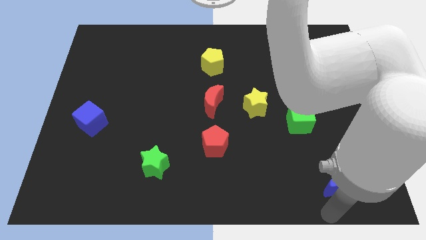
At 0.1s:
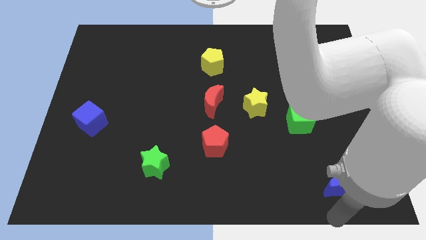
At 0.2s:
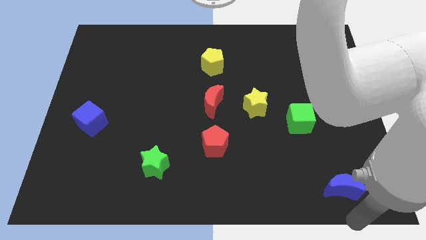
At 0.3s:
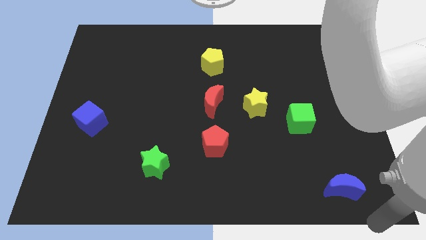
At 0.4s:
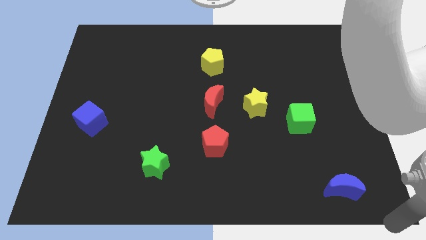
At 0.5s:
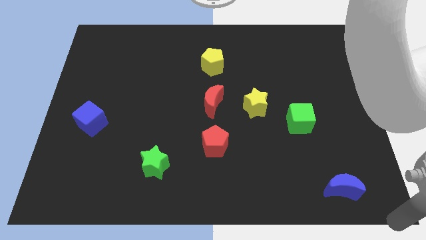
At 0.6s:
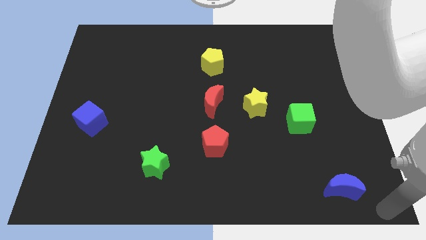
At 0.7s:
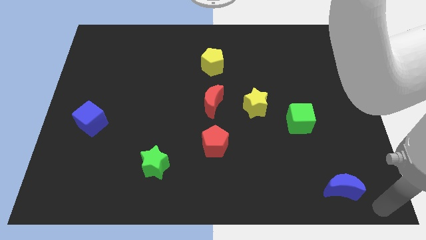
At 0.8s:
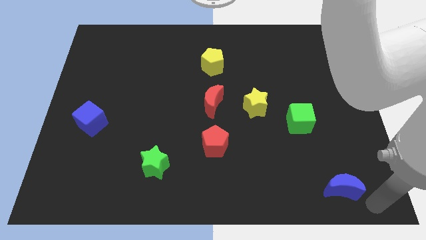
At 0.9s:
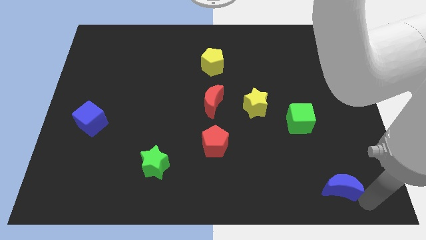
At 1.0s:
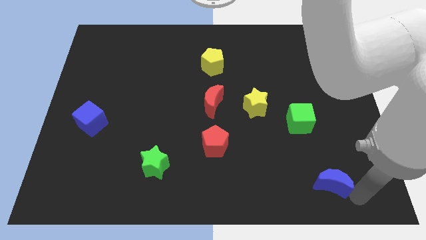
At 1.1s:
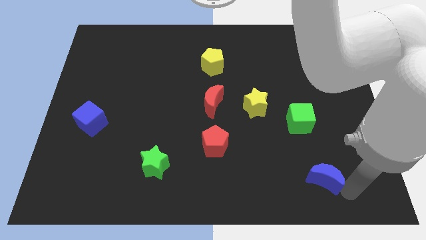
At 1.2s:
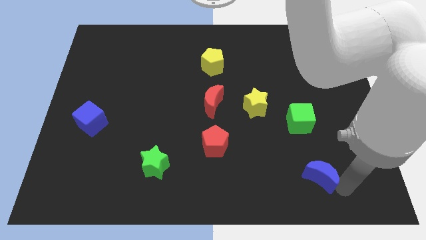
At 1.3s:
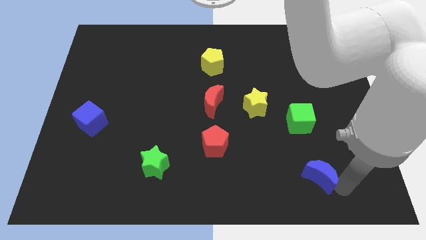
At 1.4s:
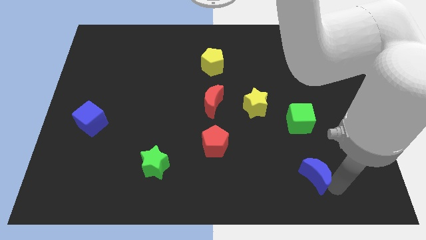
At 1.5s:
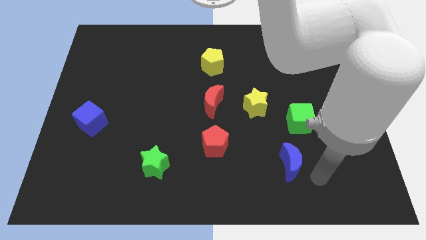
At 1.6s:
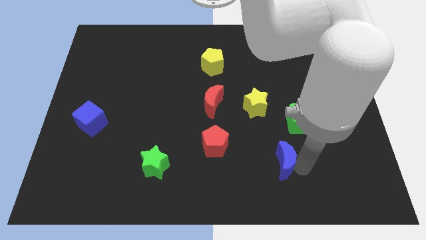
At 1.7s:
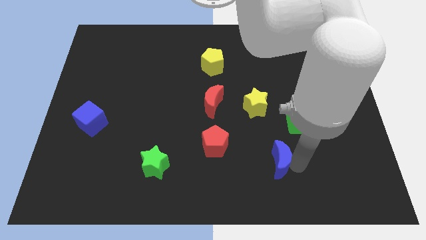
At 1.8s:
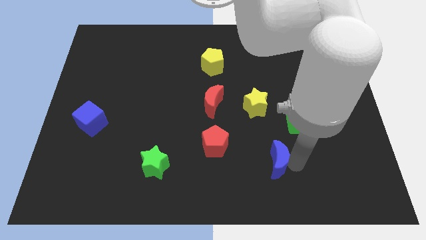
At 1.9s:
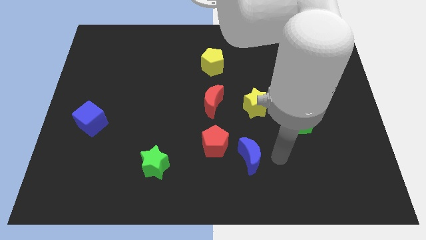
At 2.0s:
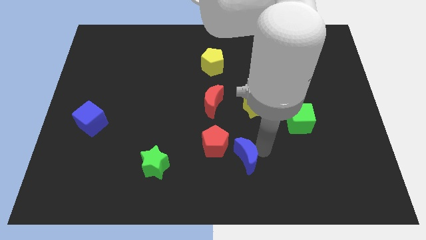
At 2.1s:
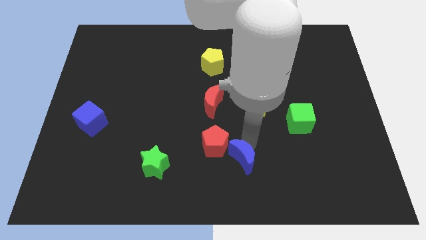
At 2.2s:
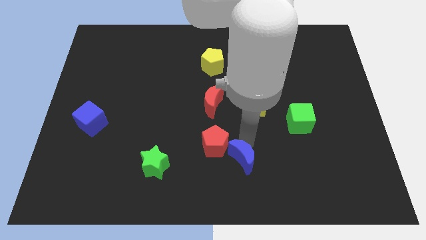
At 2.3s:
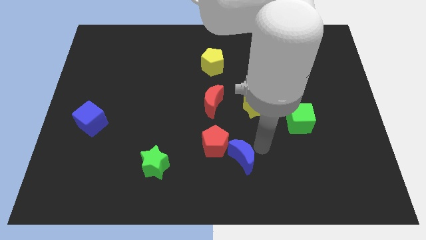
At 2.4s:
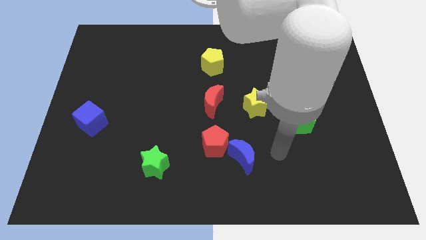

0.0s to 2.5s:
move the blue moon right to the red pentagon

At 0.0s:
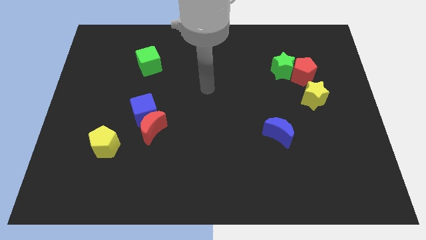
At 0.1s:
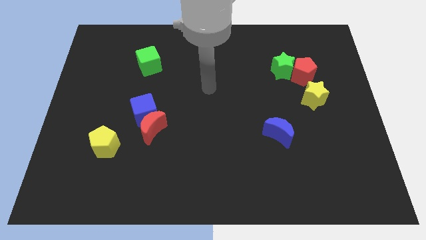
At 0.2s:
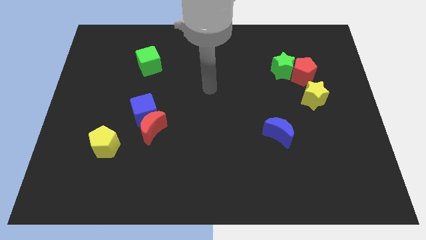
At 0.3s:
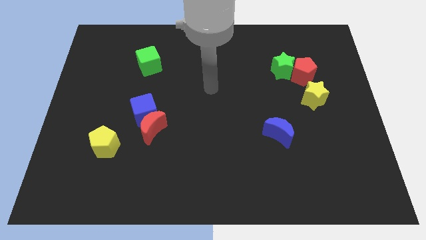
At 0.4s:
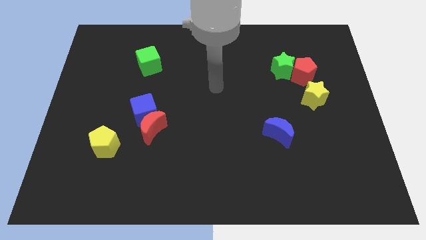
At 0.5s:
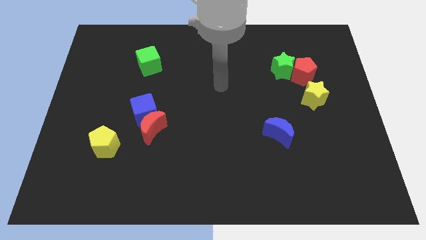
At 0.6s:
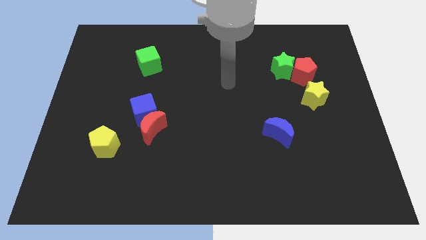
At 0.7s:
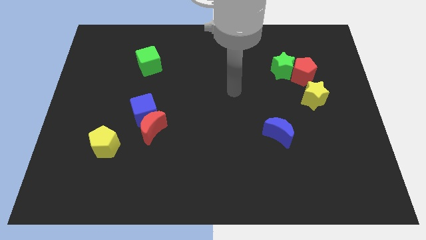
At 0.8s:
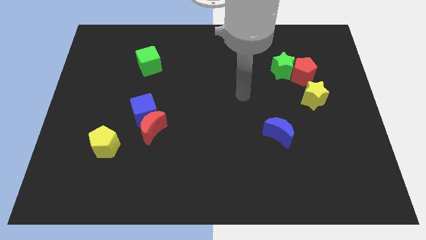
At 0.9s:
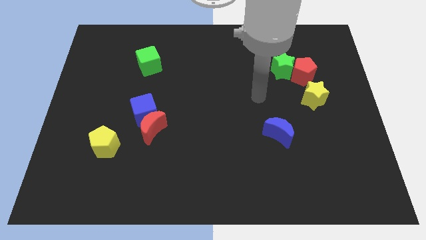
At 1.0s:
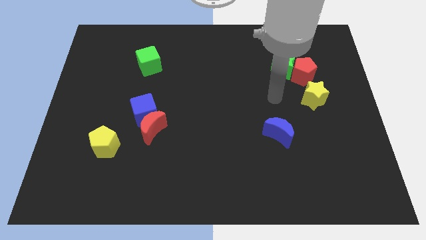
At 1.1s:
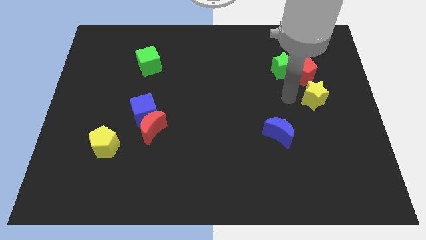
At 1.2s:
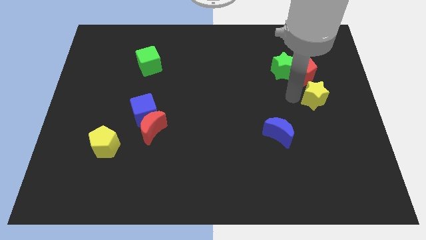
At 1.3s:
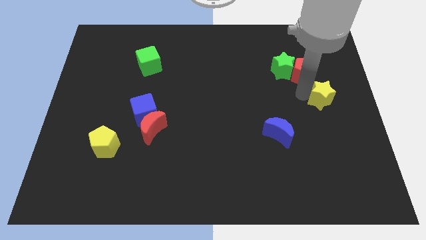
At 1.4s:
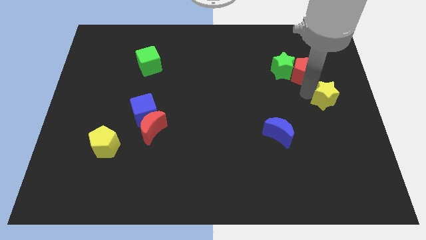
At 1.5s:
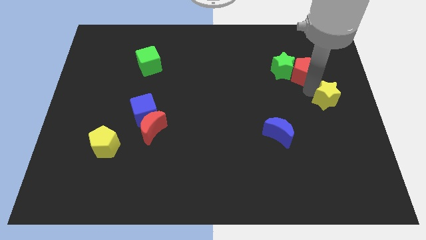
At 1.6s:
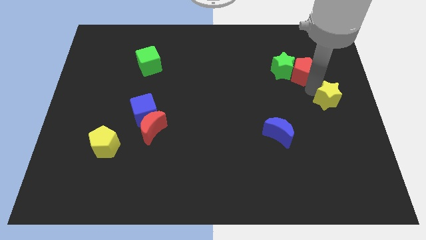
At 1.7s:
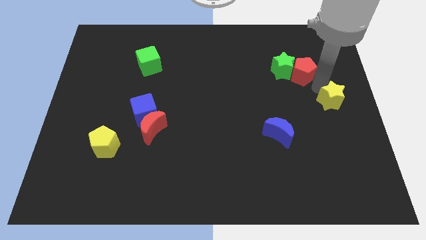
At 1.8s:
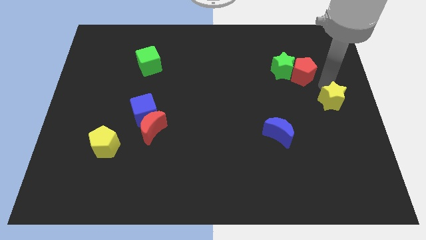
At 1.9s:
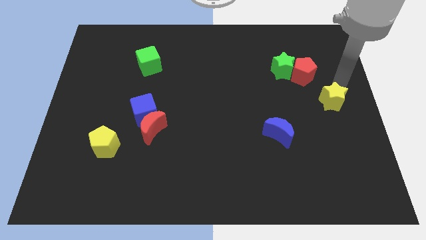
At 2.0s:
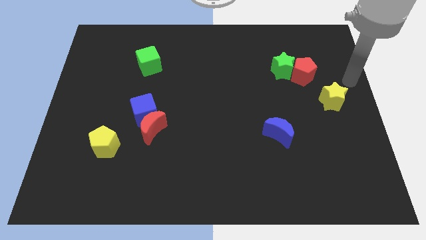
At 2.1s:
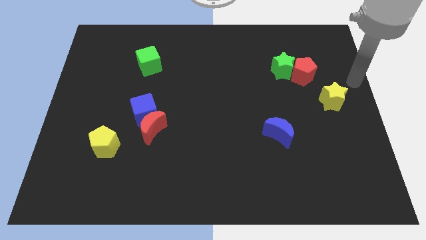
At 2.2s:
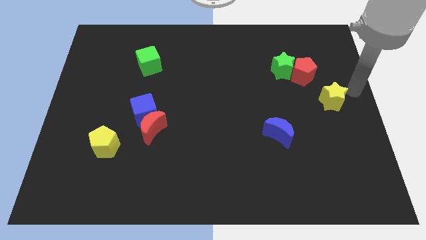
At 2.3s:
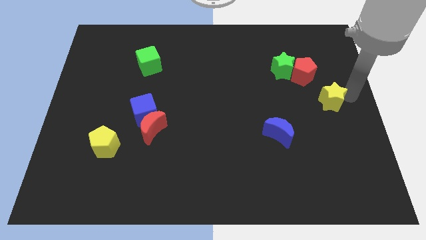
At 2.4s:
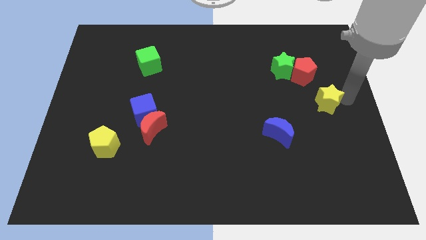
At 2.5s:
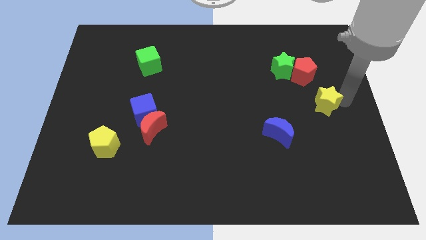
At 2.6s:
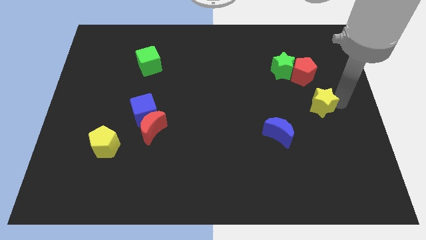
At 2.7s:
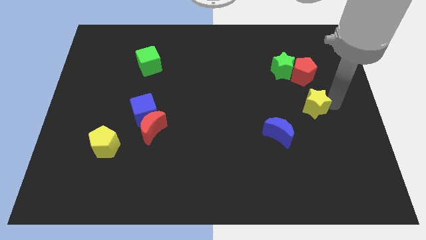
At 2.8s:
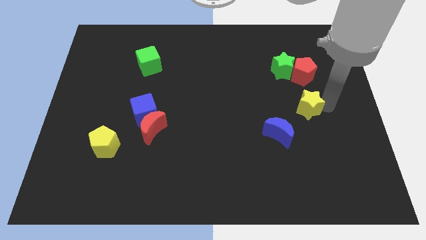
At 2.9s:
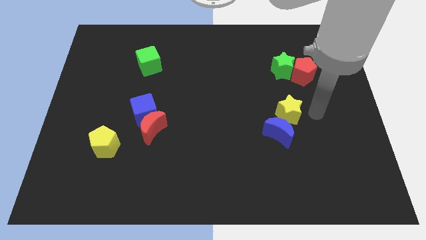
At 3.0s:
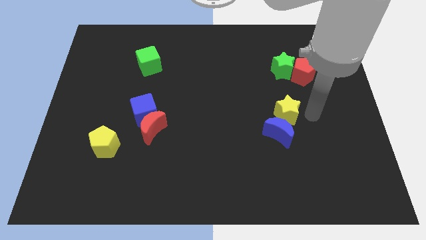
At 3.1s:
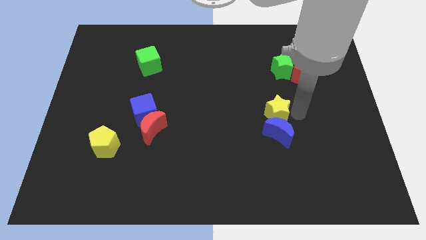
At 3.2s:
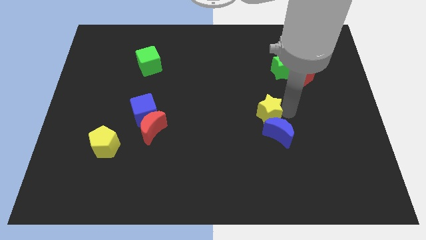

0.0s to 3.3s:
push the yellow star to the top of the blue crescent

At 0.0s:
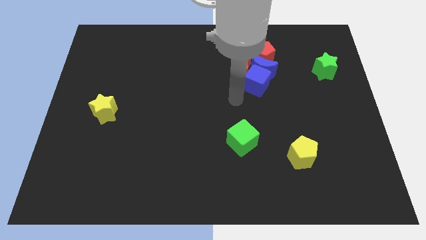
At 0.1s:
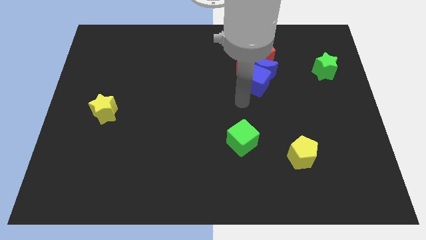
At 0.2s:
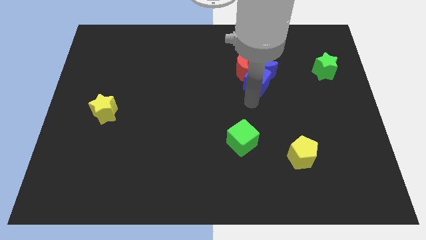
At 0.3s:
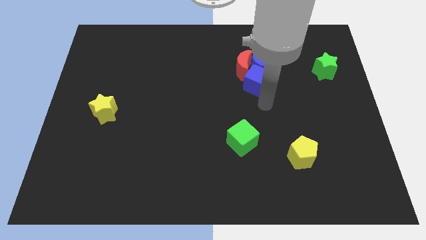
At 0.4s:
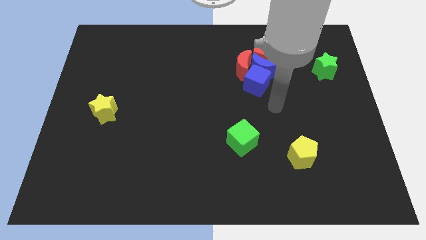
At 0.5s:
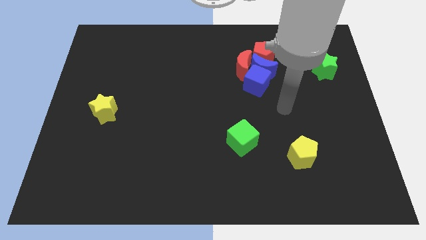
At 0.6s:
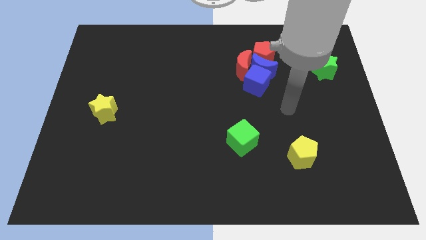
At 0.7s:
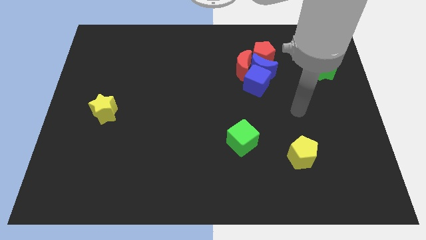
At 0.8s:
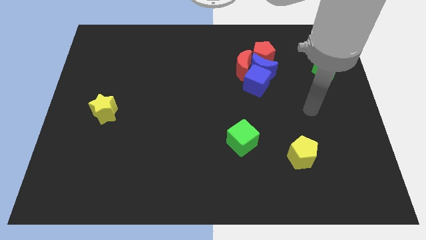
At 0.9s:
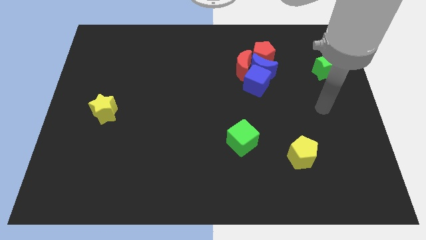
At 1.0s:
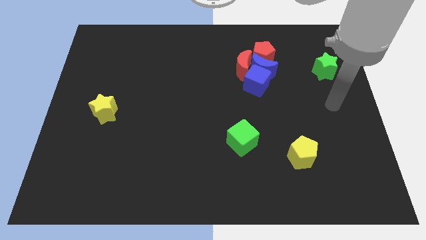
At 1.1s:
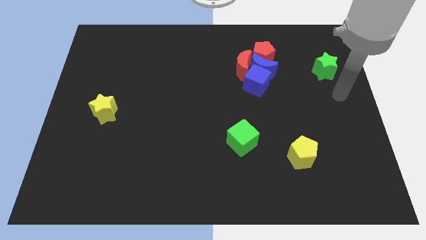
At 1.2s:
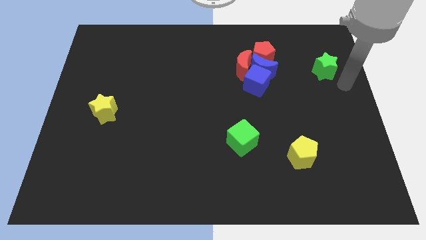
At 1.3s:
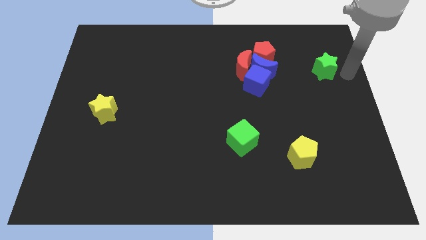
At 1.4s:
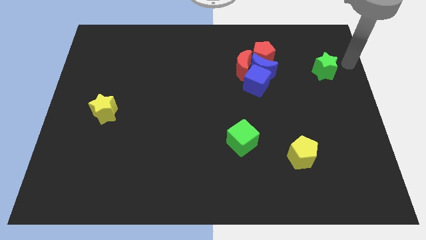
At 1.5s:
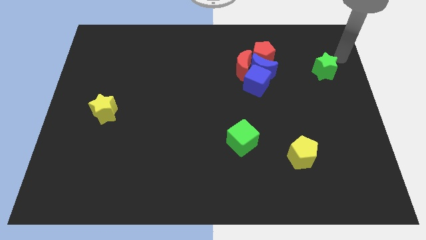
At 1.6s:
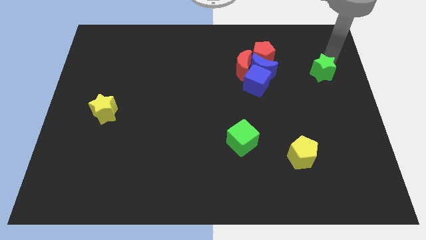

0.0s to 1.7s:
slide the arm towards the green star

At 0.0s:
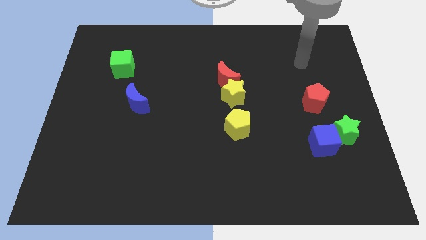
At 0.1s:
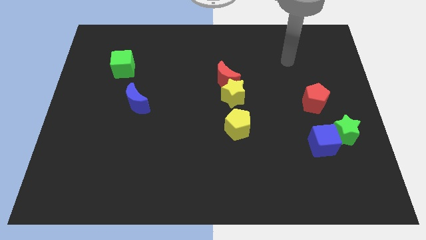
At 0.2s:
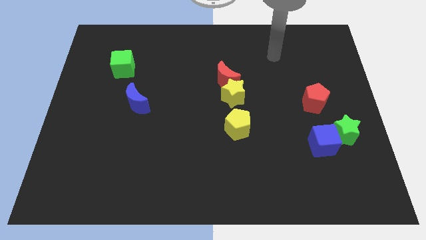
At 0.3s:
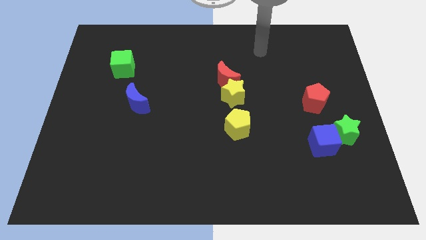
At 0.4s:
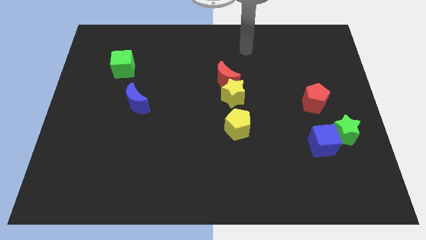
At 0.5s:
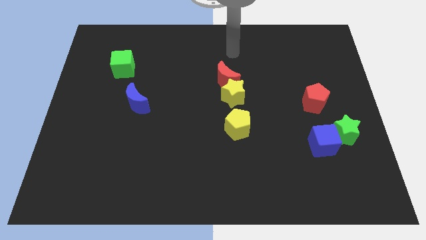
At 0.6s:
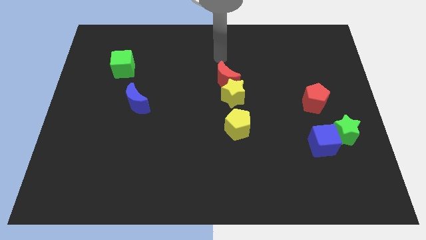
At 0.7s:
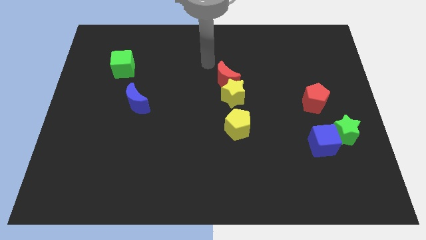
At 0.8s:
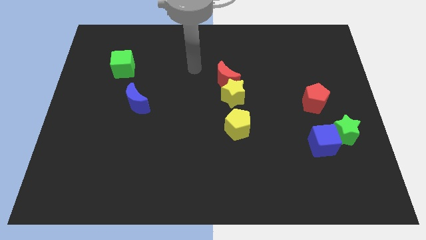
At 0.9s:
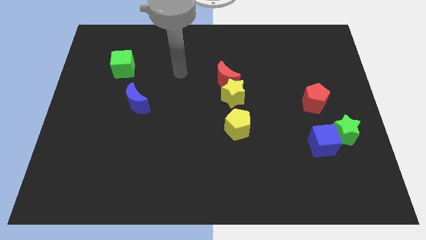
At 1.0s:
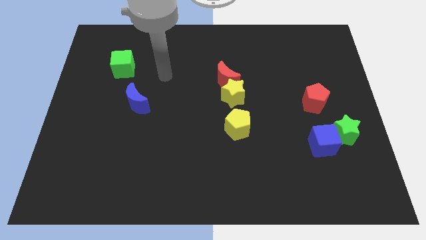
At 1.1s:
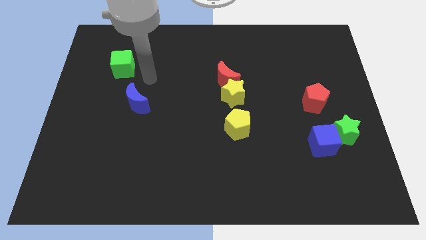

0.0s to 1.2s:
move your hand towards green cube

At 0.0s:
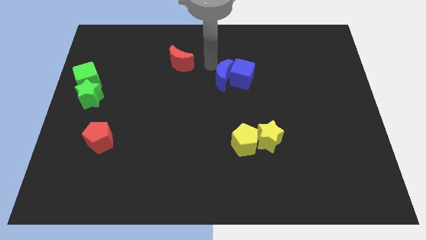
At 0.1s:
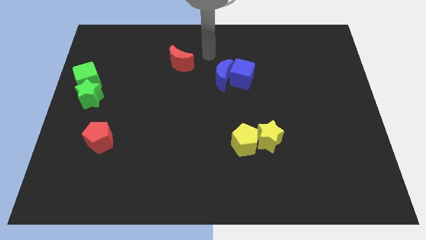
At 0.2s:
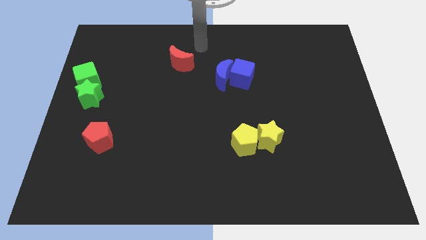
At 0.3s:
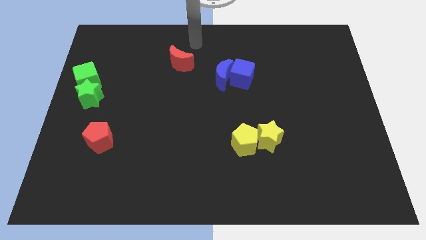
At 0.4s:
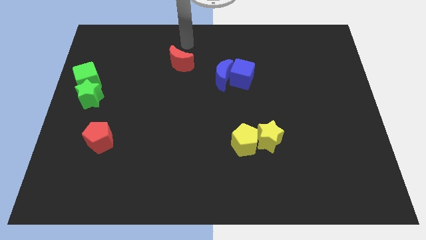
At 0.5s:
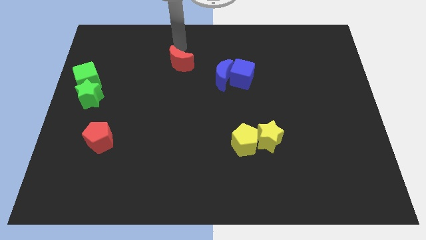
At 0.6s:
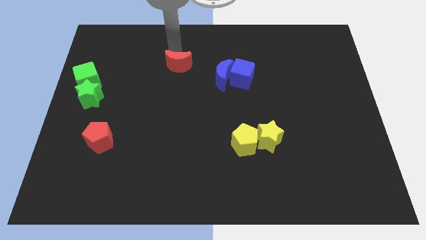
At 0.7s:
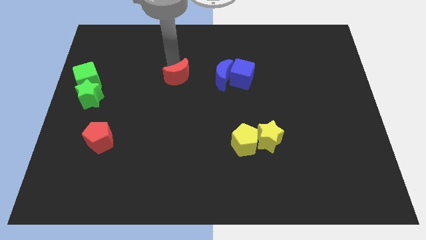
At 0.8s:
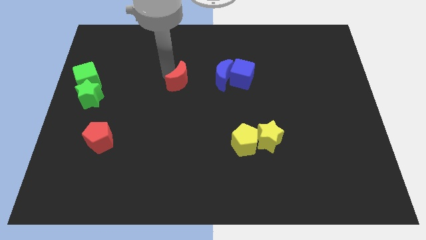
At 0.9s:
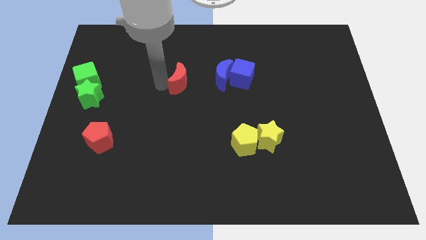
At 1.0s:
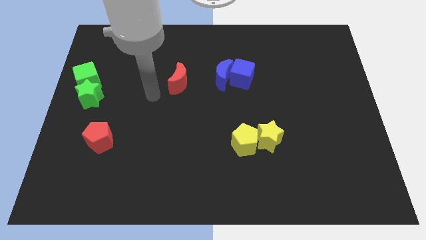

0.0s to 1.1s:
place the red moon left to the blue moon
